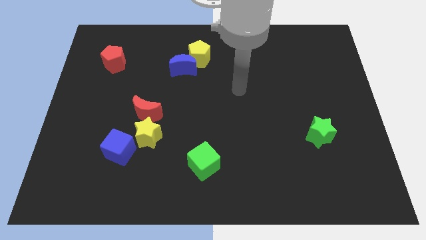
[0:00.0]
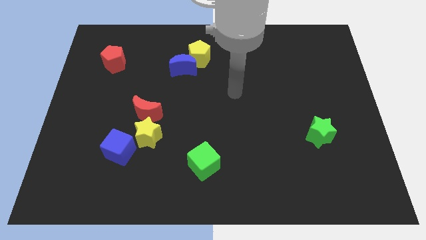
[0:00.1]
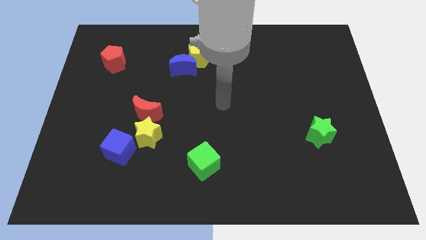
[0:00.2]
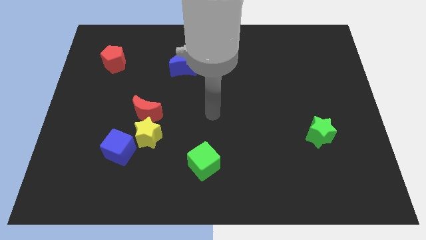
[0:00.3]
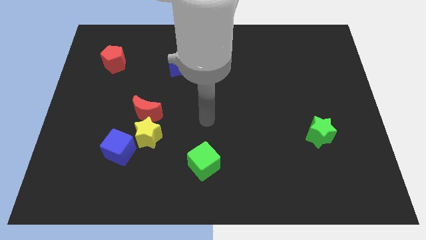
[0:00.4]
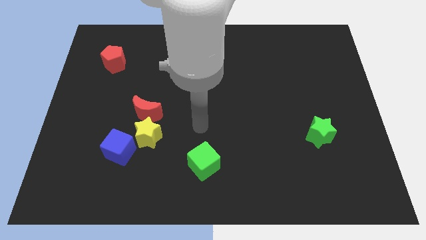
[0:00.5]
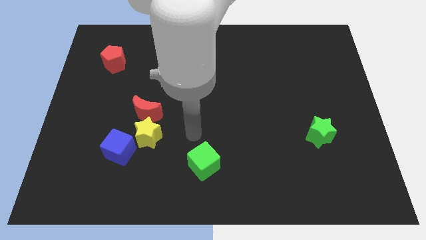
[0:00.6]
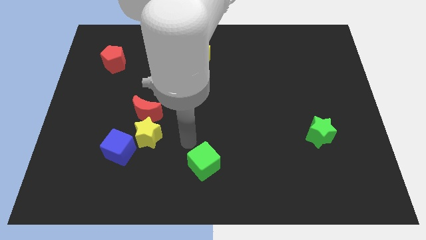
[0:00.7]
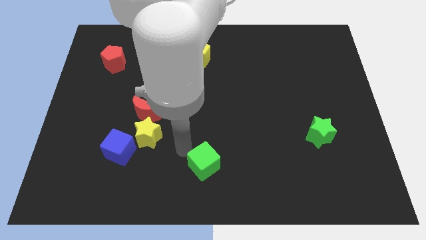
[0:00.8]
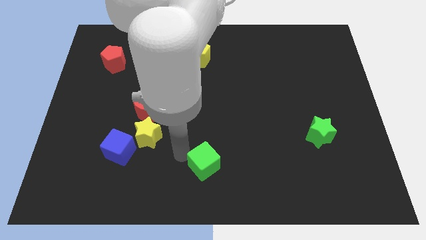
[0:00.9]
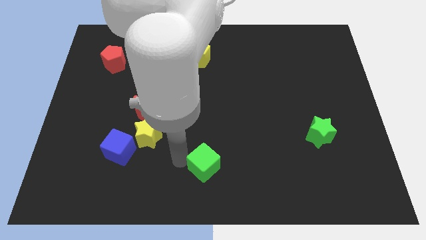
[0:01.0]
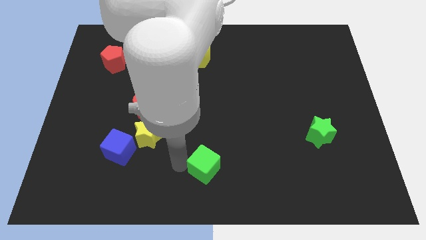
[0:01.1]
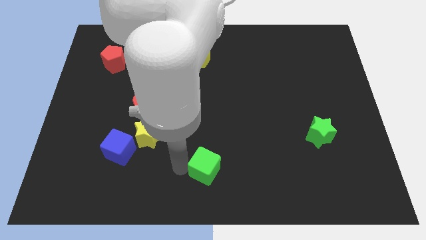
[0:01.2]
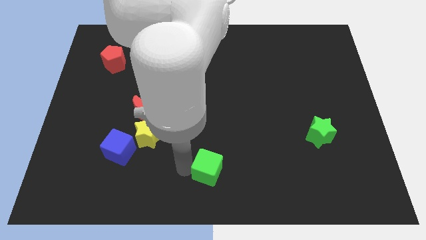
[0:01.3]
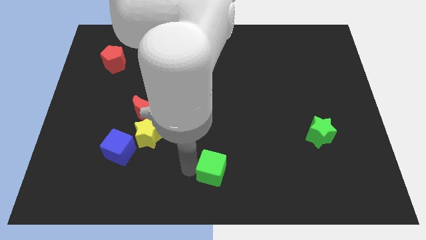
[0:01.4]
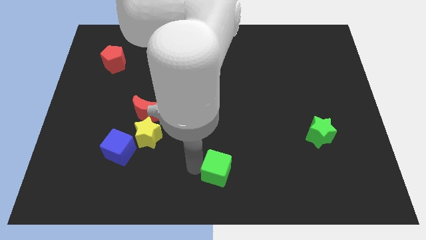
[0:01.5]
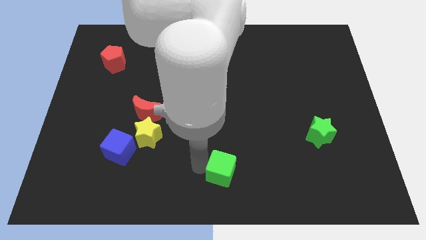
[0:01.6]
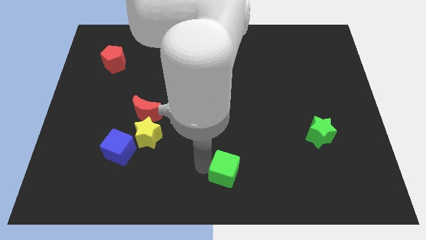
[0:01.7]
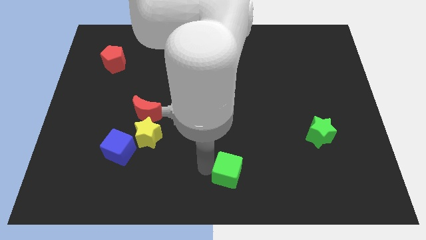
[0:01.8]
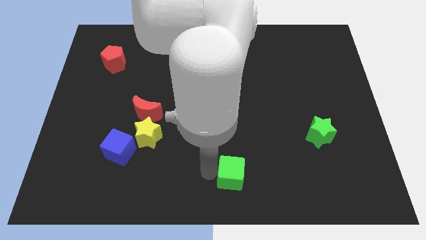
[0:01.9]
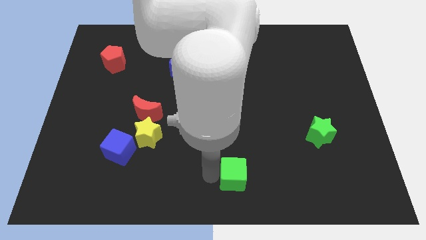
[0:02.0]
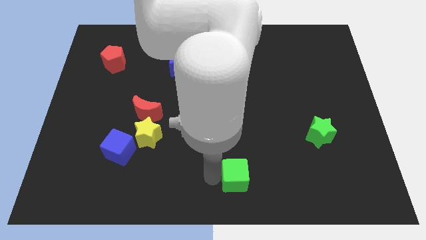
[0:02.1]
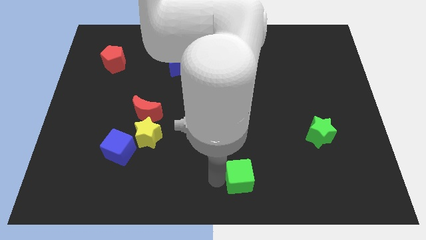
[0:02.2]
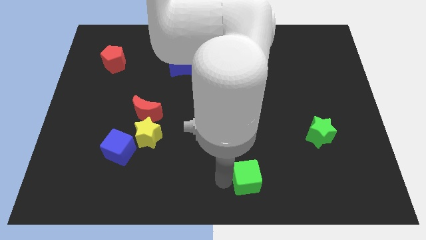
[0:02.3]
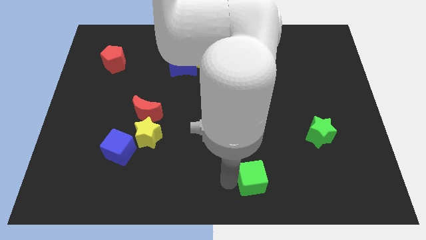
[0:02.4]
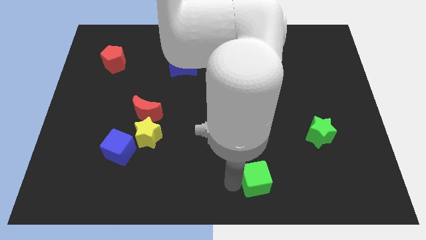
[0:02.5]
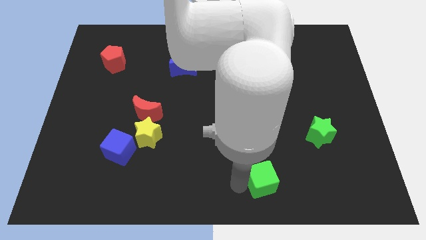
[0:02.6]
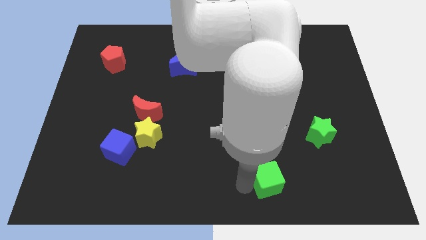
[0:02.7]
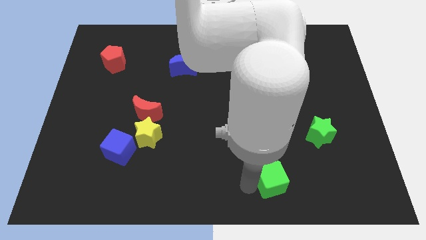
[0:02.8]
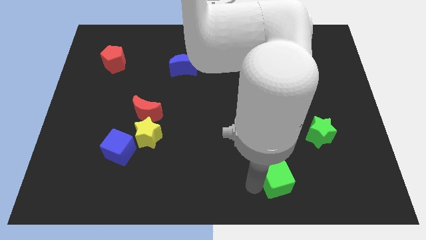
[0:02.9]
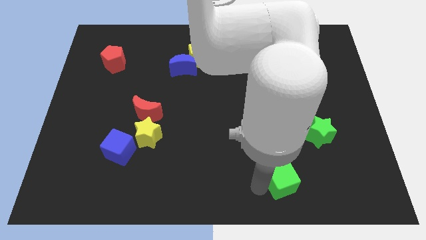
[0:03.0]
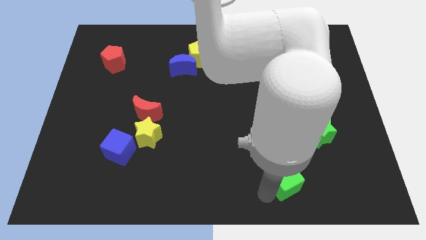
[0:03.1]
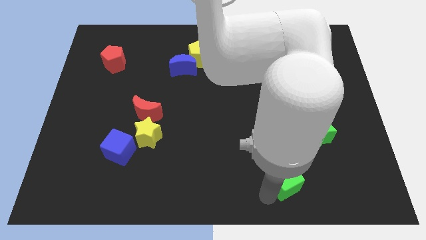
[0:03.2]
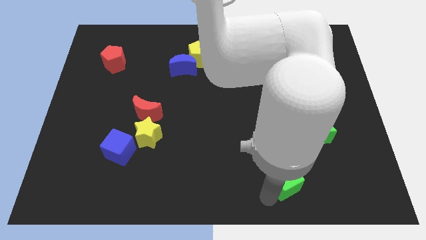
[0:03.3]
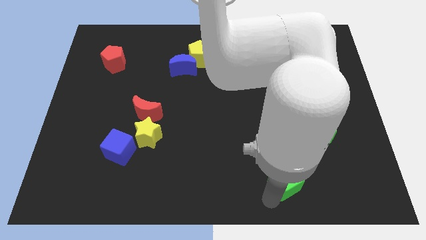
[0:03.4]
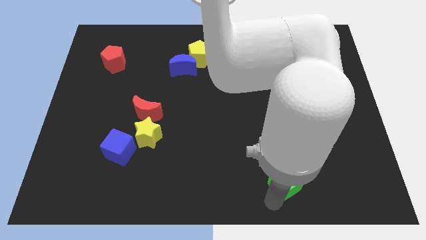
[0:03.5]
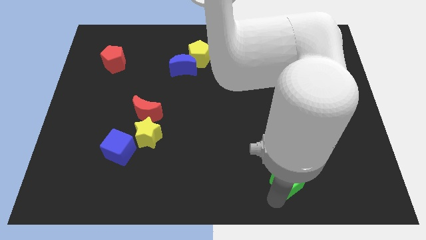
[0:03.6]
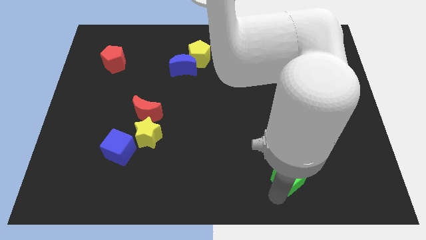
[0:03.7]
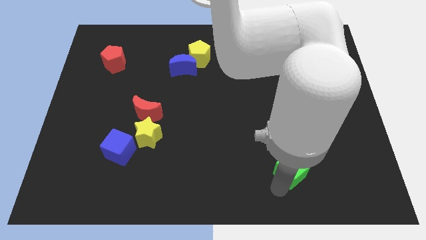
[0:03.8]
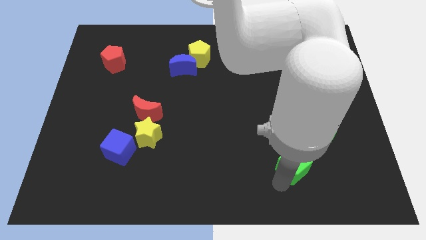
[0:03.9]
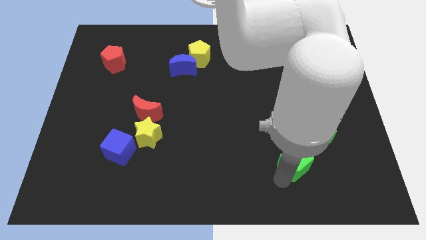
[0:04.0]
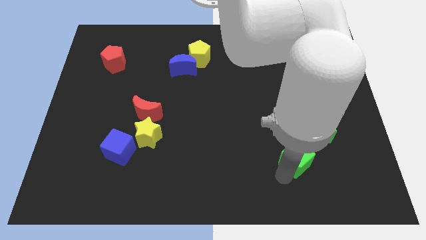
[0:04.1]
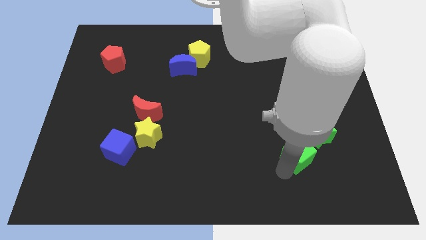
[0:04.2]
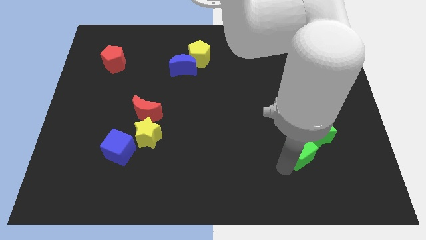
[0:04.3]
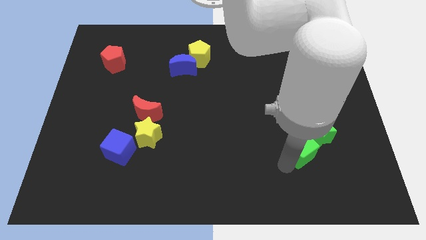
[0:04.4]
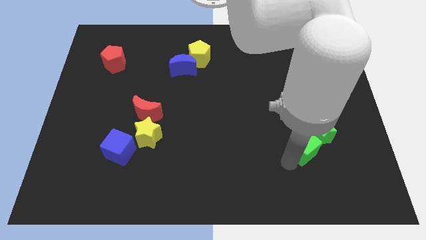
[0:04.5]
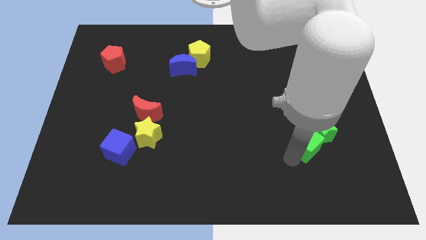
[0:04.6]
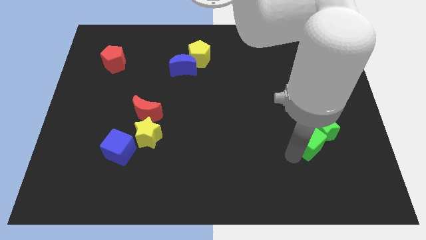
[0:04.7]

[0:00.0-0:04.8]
put the green cube next to the green star

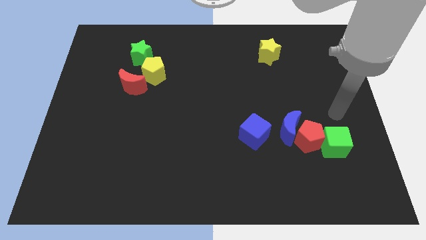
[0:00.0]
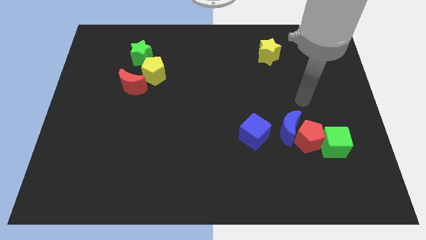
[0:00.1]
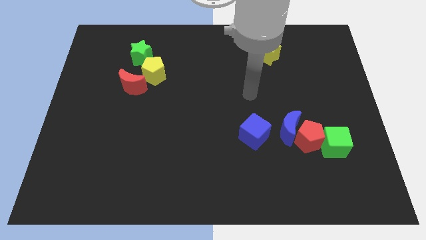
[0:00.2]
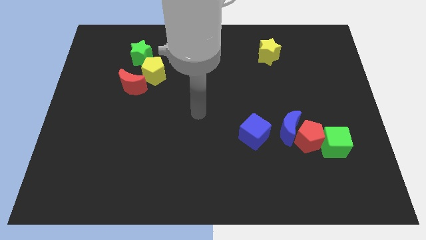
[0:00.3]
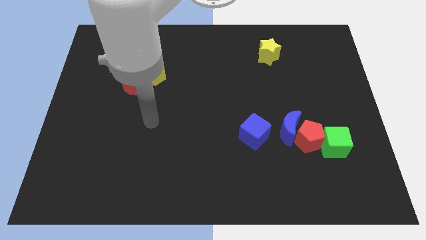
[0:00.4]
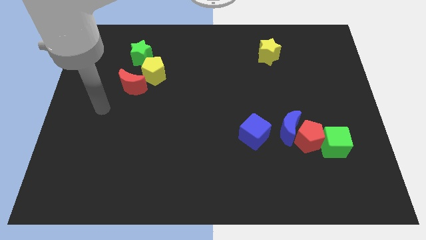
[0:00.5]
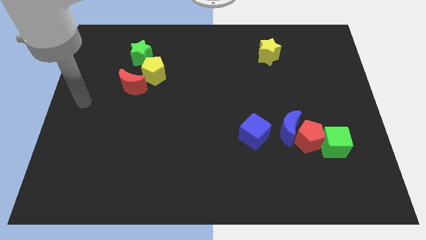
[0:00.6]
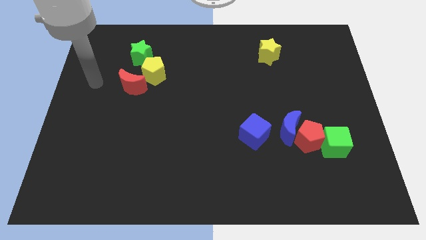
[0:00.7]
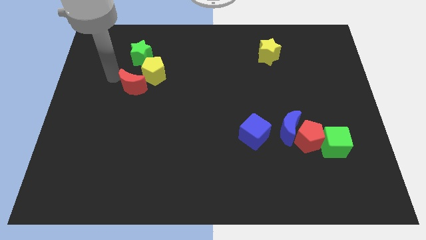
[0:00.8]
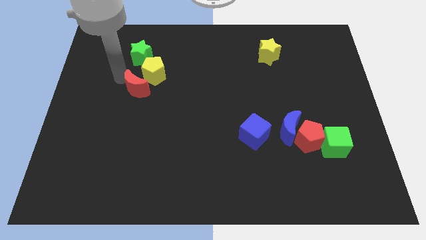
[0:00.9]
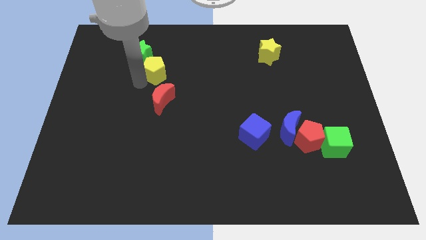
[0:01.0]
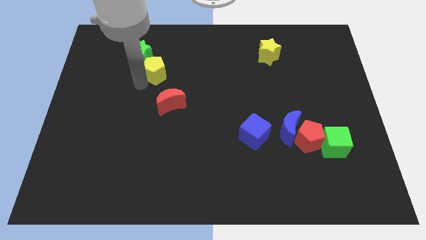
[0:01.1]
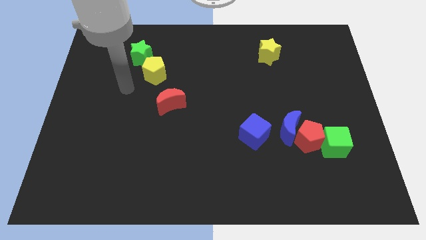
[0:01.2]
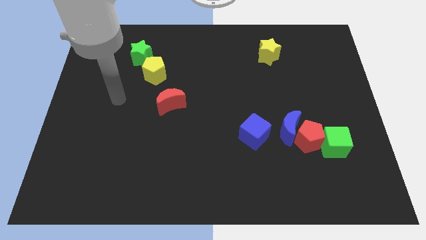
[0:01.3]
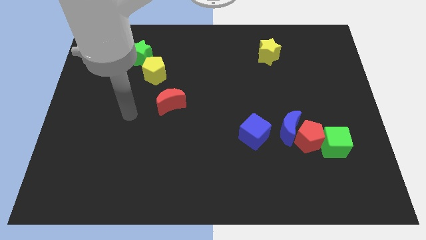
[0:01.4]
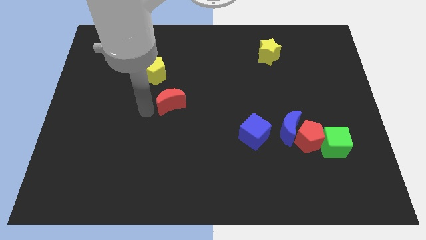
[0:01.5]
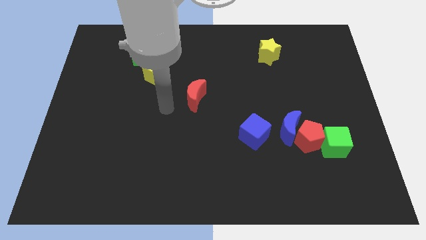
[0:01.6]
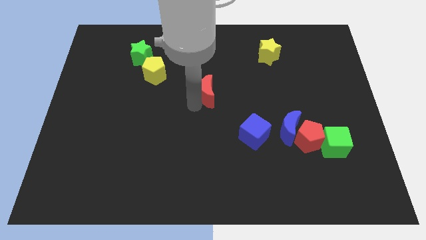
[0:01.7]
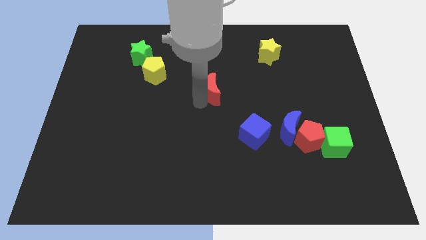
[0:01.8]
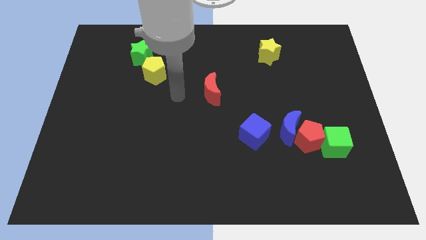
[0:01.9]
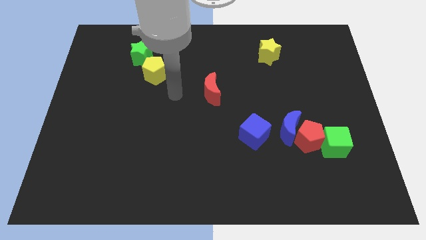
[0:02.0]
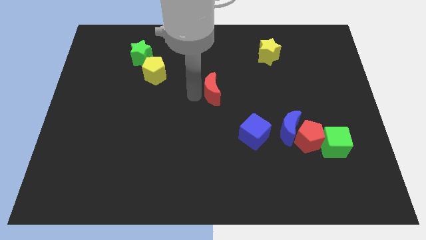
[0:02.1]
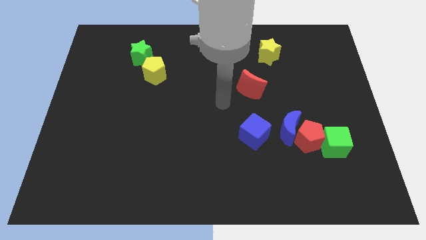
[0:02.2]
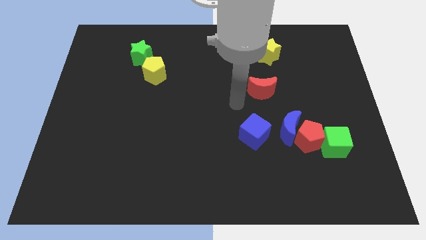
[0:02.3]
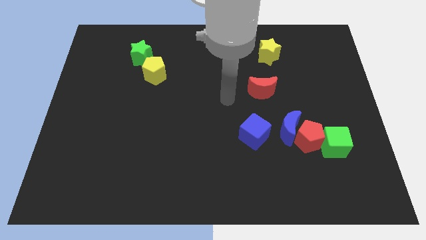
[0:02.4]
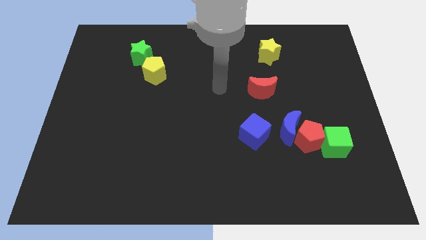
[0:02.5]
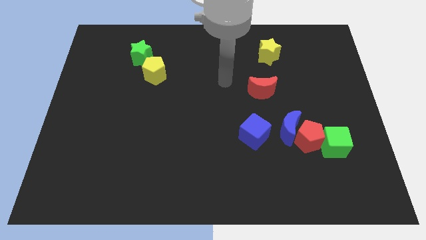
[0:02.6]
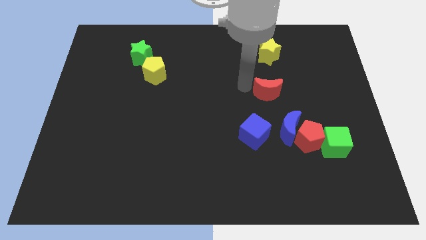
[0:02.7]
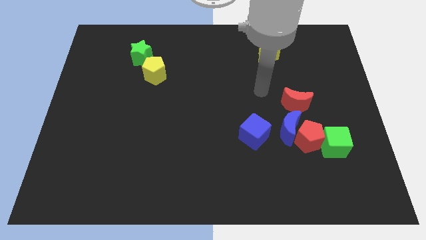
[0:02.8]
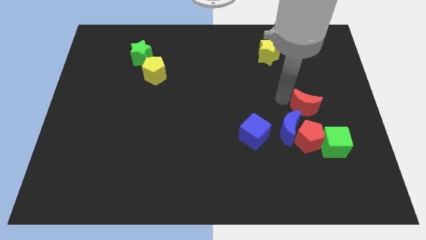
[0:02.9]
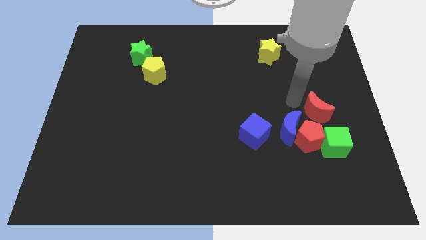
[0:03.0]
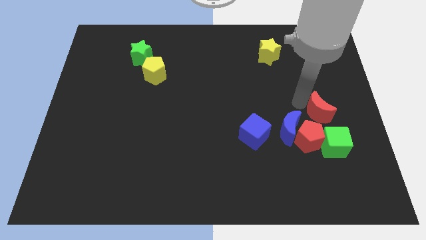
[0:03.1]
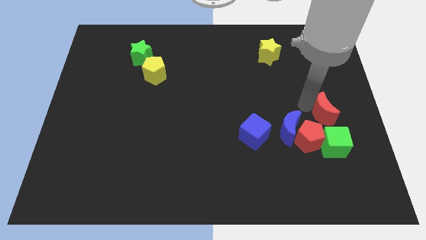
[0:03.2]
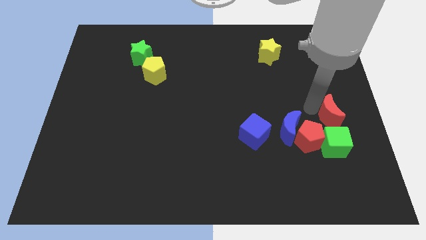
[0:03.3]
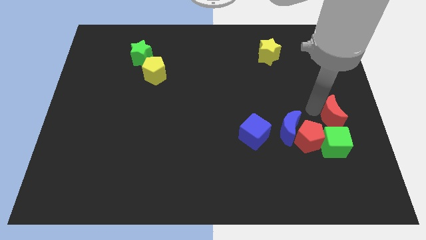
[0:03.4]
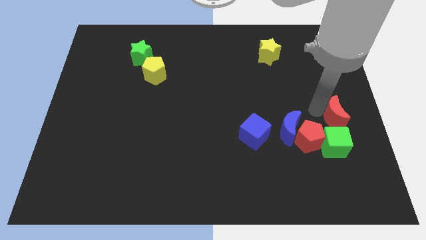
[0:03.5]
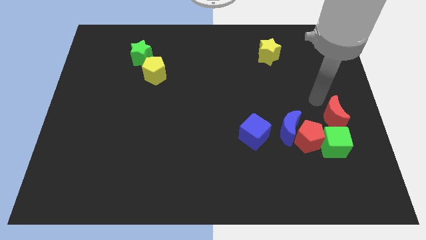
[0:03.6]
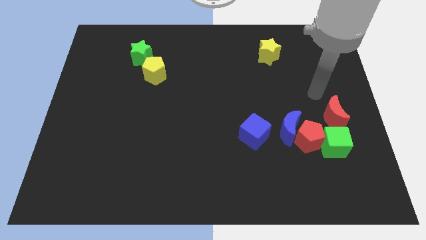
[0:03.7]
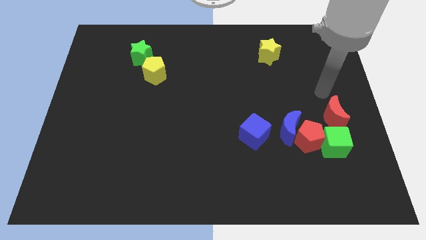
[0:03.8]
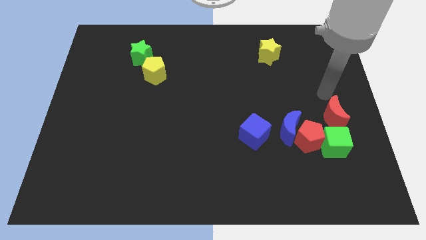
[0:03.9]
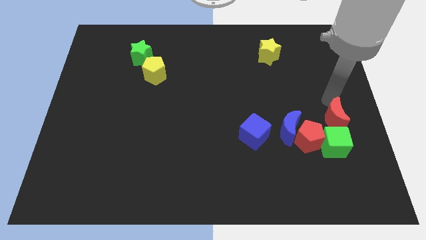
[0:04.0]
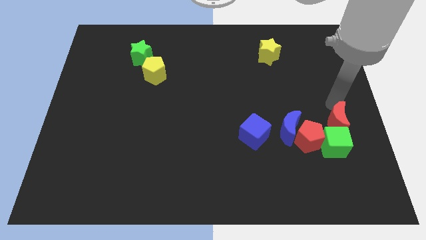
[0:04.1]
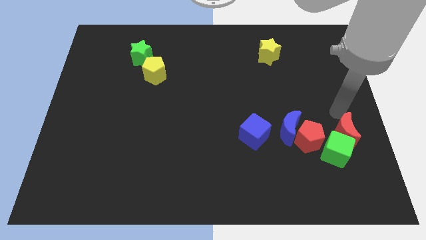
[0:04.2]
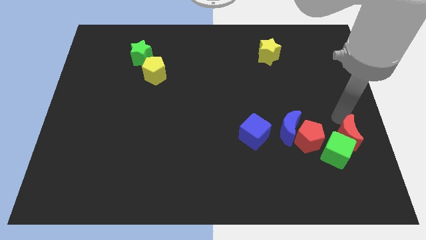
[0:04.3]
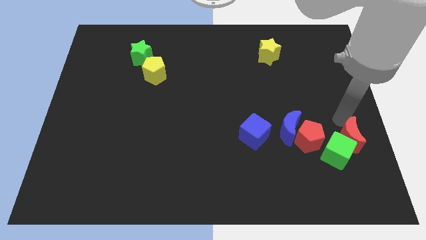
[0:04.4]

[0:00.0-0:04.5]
move the red moon to the green cube
